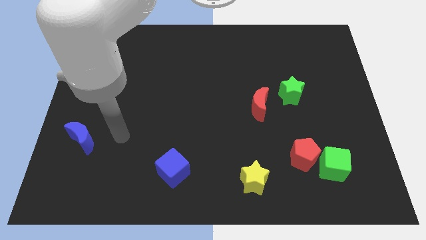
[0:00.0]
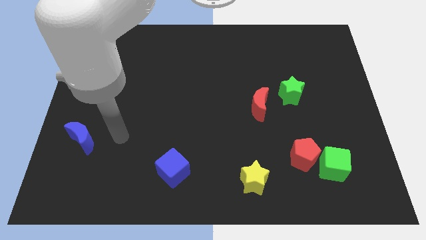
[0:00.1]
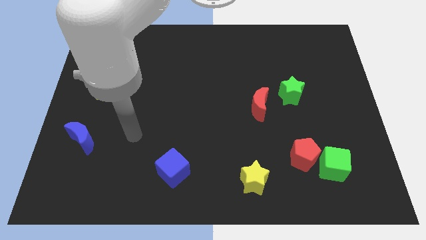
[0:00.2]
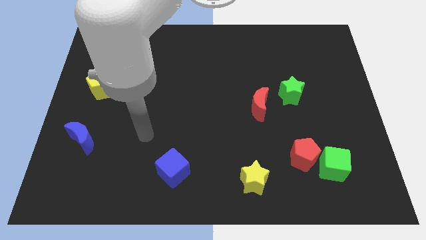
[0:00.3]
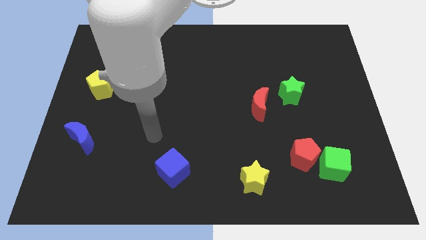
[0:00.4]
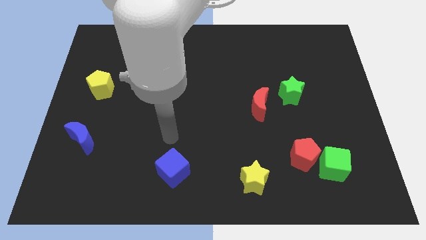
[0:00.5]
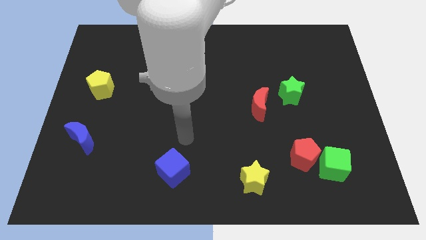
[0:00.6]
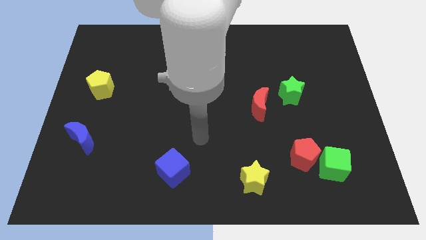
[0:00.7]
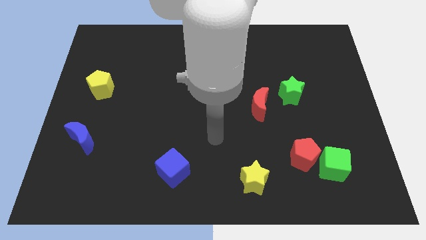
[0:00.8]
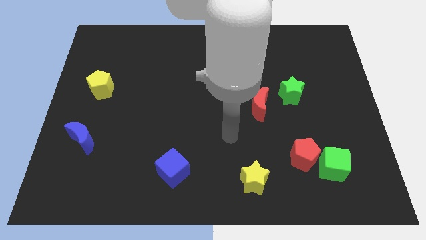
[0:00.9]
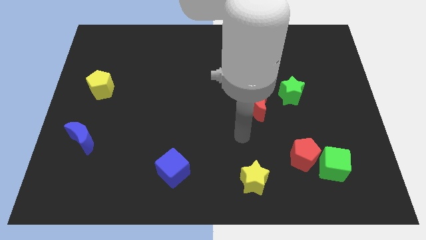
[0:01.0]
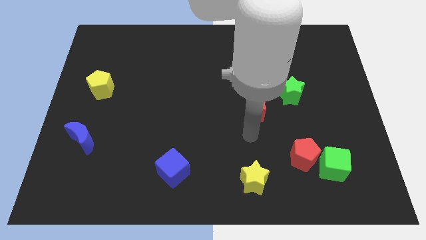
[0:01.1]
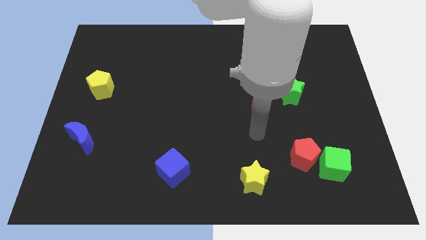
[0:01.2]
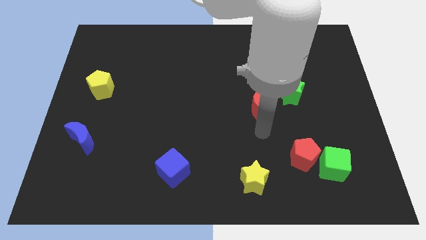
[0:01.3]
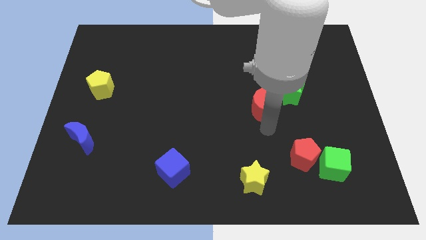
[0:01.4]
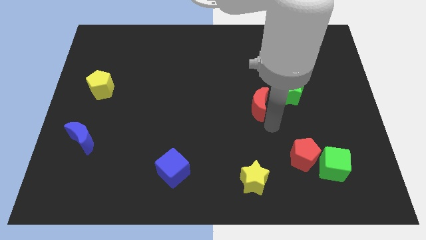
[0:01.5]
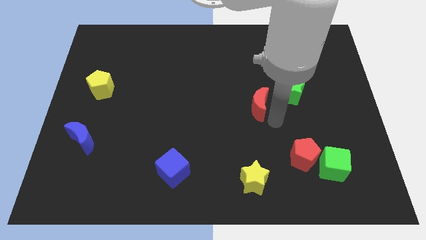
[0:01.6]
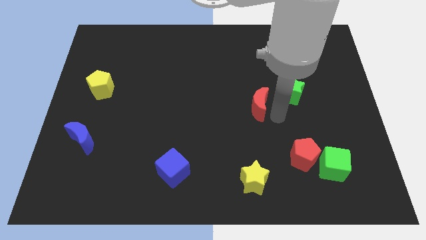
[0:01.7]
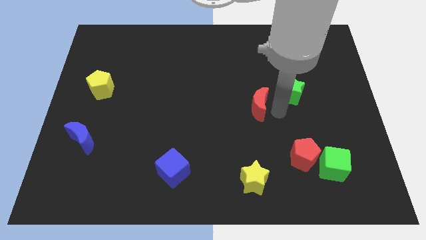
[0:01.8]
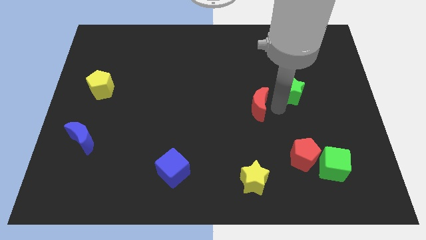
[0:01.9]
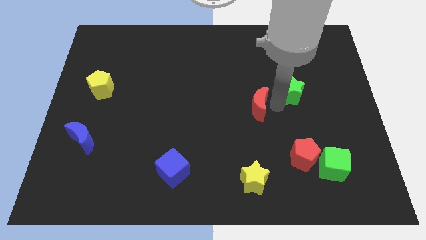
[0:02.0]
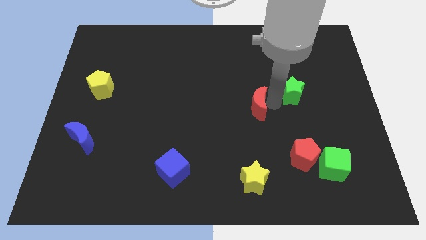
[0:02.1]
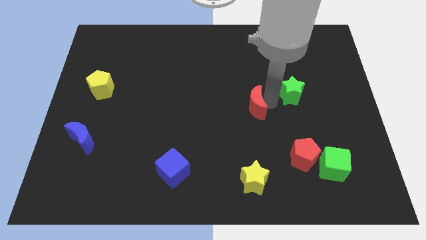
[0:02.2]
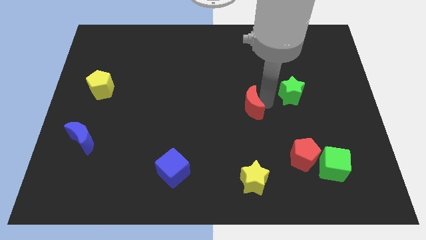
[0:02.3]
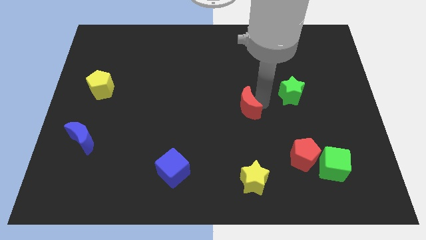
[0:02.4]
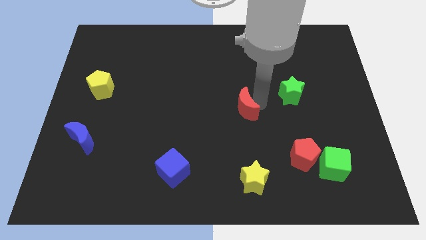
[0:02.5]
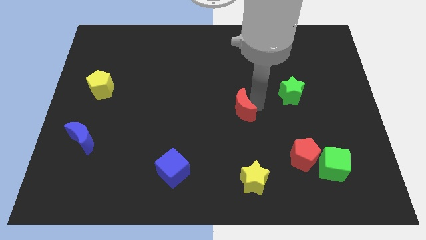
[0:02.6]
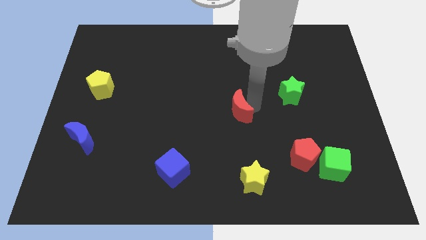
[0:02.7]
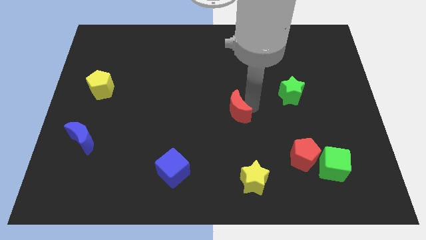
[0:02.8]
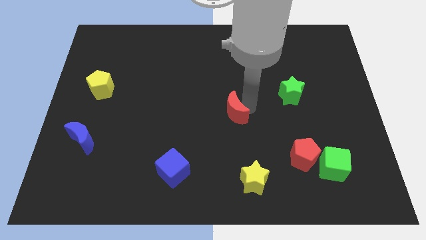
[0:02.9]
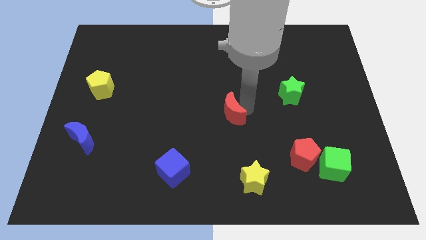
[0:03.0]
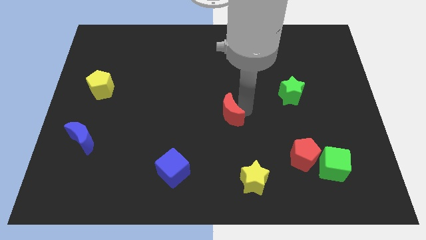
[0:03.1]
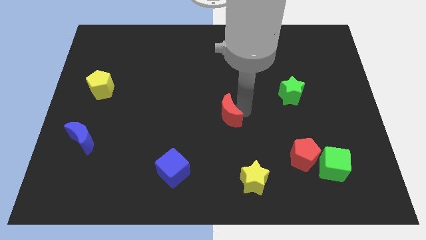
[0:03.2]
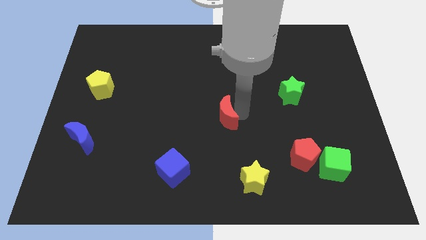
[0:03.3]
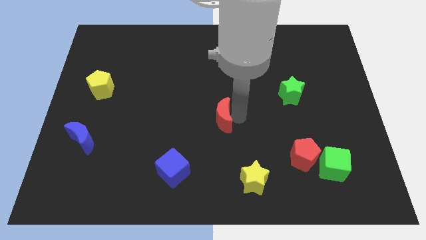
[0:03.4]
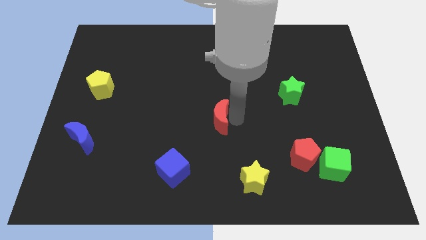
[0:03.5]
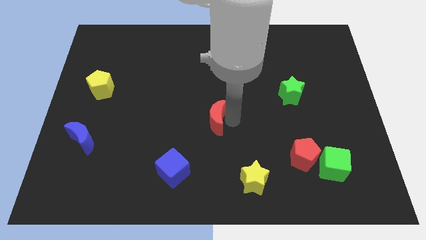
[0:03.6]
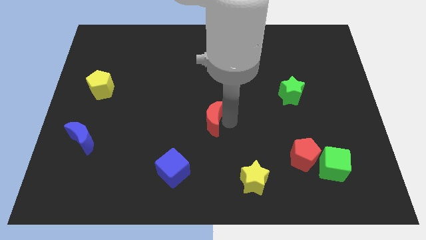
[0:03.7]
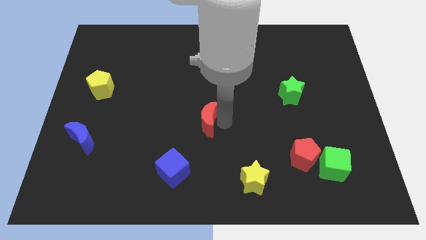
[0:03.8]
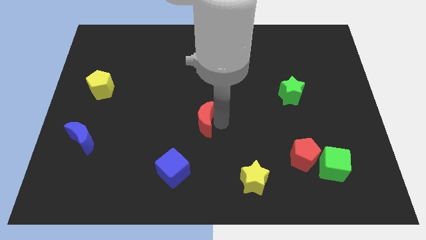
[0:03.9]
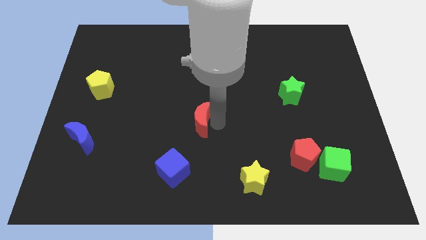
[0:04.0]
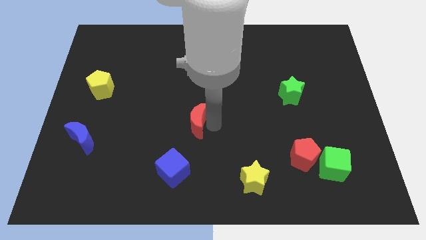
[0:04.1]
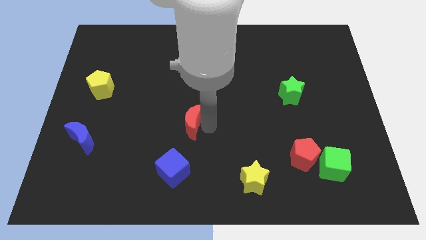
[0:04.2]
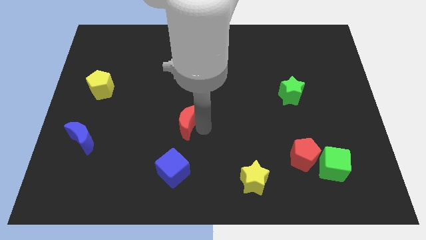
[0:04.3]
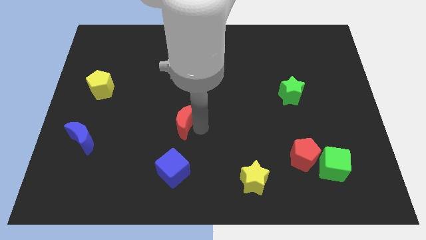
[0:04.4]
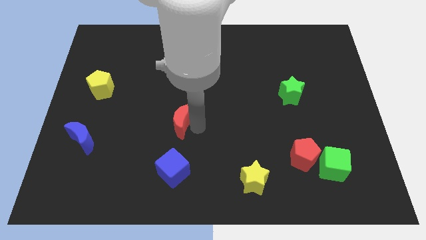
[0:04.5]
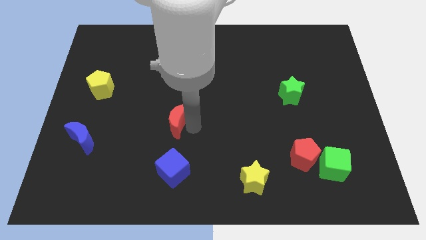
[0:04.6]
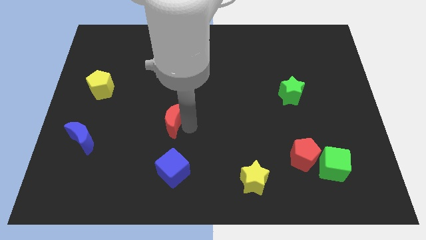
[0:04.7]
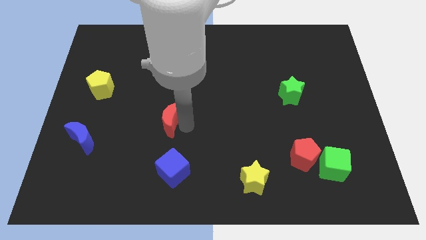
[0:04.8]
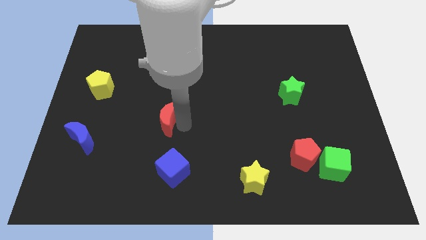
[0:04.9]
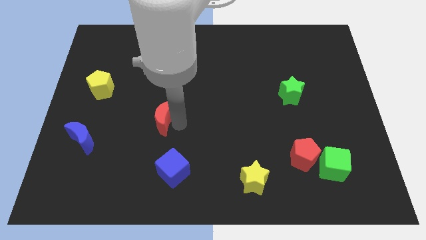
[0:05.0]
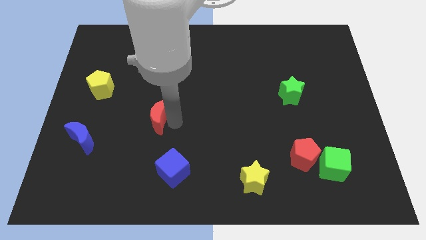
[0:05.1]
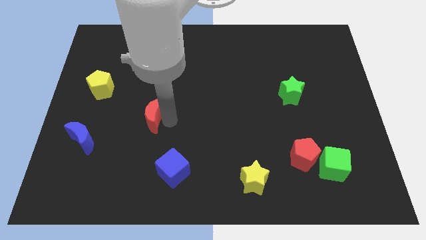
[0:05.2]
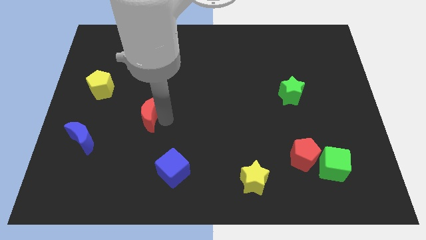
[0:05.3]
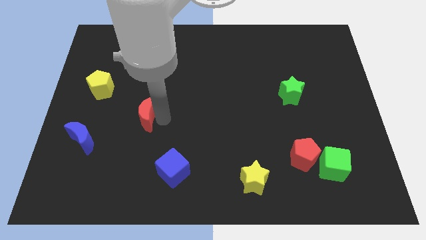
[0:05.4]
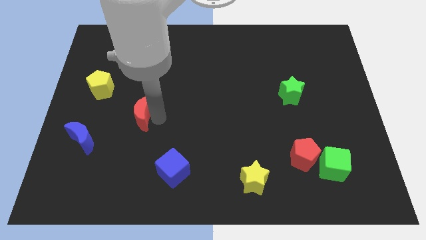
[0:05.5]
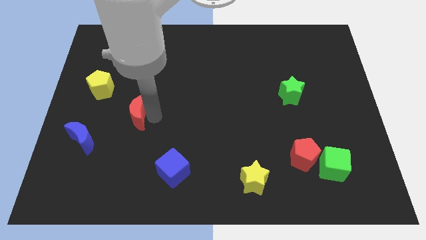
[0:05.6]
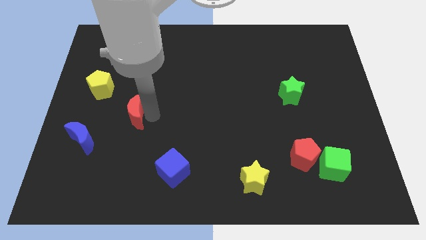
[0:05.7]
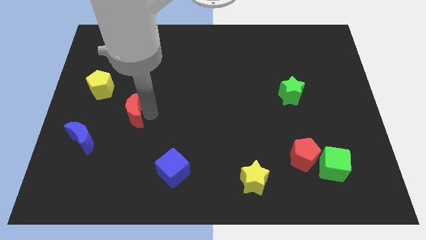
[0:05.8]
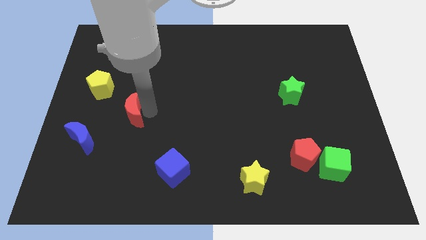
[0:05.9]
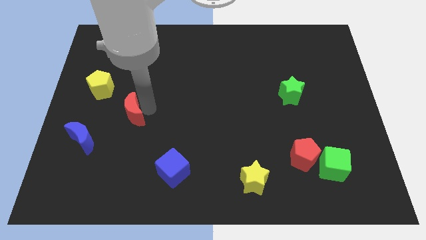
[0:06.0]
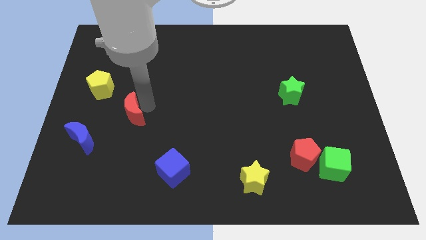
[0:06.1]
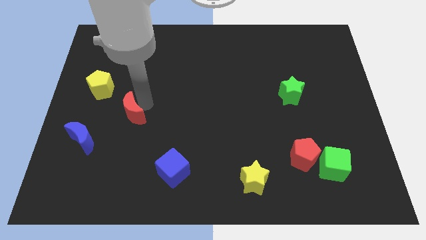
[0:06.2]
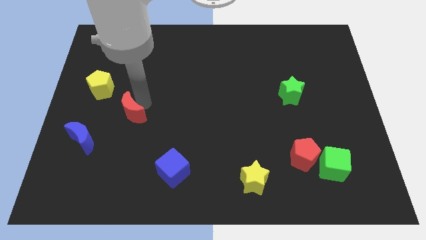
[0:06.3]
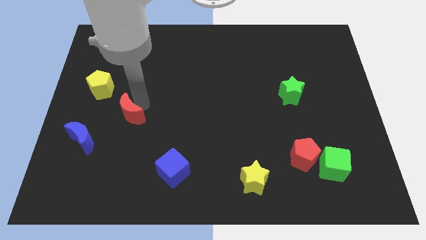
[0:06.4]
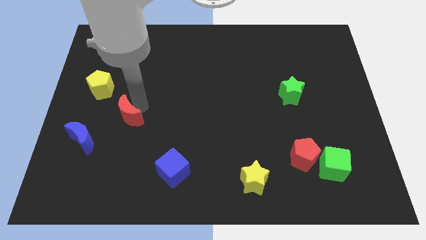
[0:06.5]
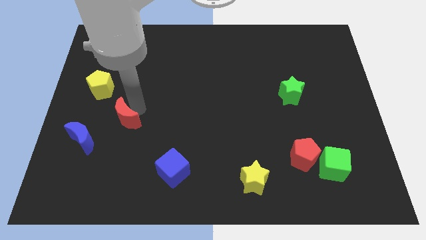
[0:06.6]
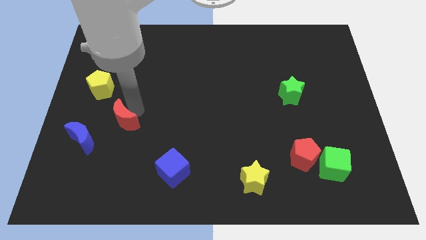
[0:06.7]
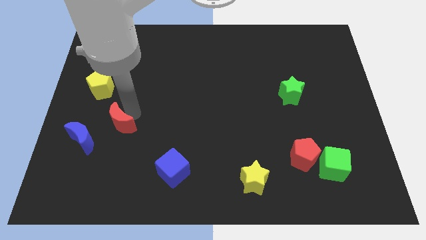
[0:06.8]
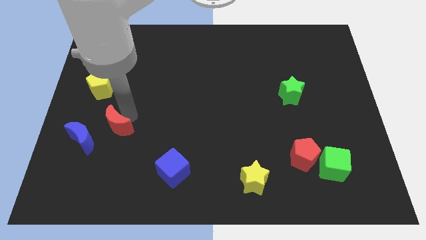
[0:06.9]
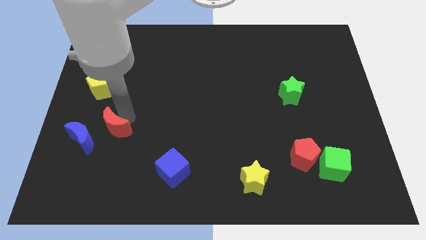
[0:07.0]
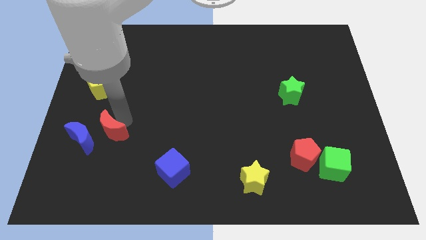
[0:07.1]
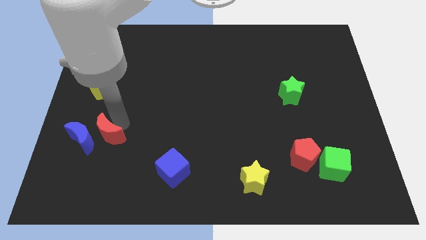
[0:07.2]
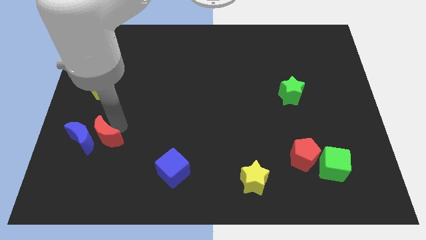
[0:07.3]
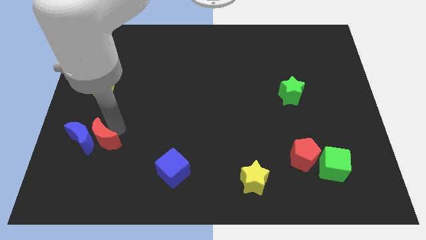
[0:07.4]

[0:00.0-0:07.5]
put the red moon towards the blue moon

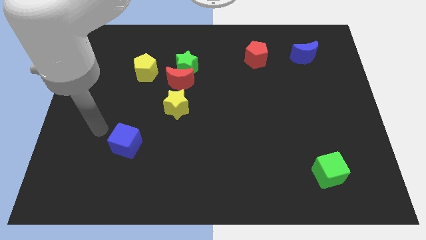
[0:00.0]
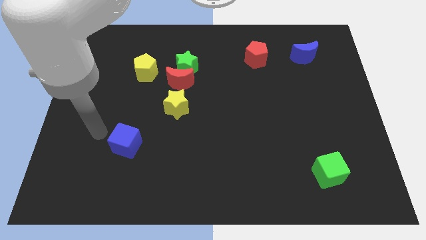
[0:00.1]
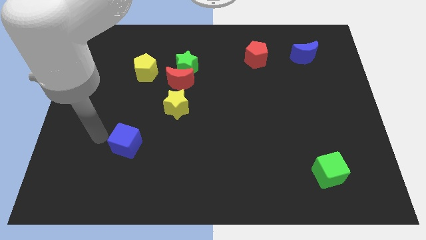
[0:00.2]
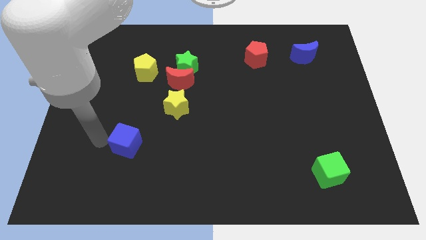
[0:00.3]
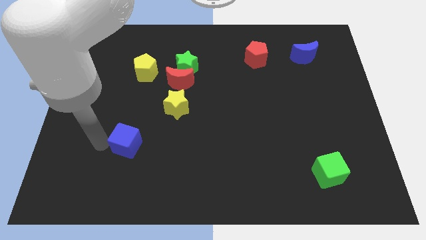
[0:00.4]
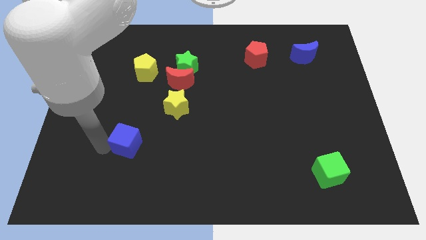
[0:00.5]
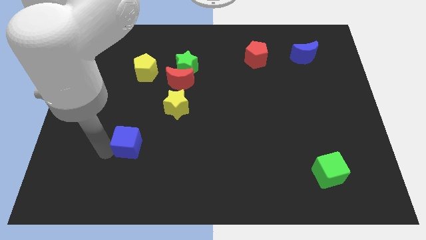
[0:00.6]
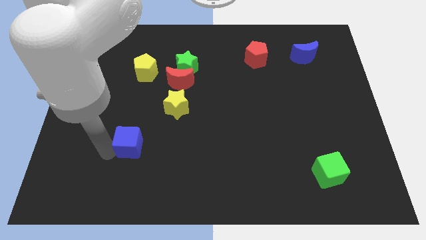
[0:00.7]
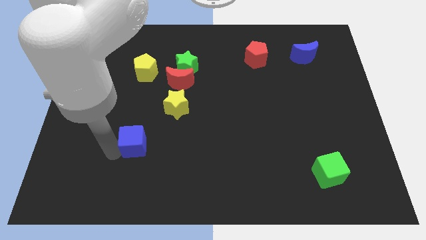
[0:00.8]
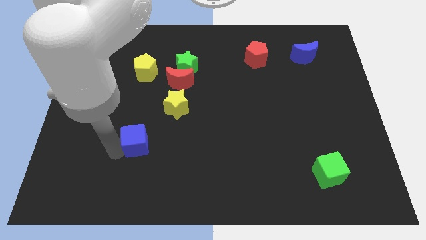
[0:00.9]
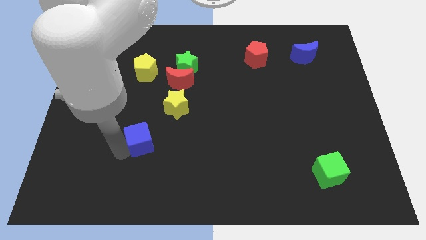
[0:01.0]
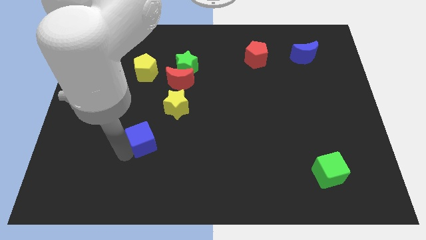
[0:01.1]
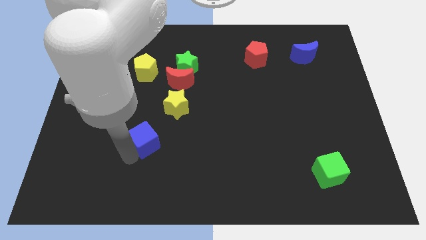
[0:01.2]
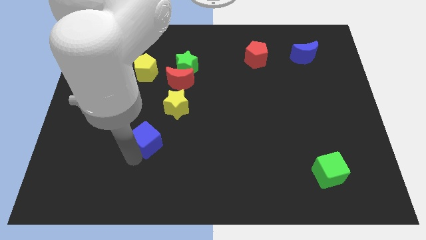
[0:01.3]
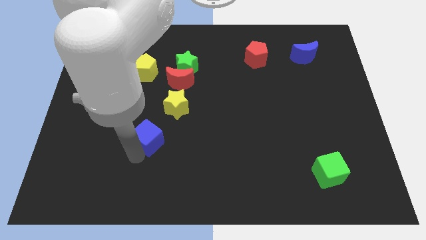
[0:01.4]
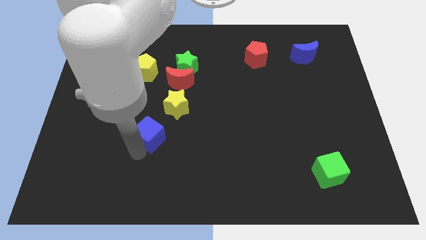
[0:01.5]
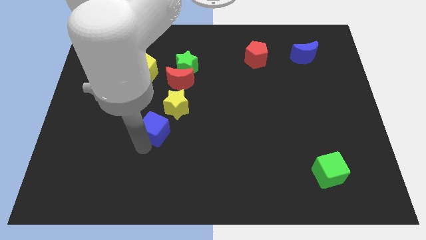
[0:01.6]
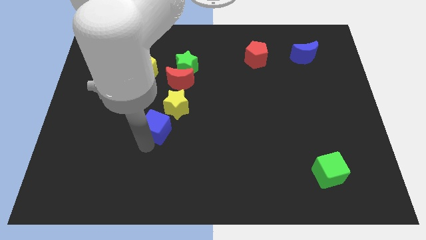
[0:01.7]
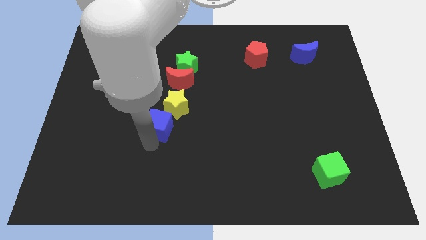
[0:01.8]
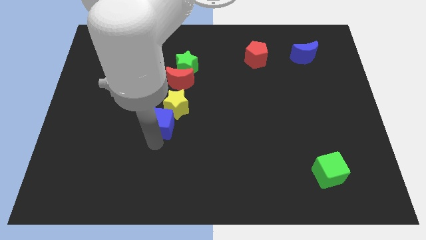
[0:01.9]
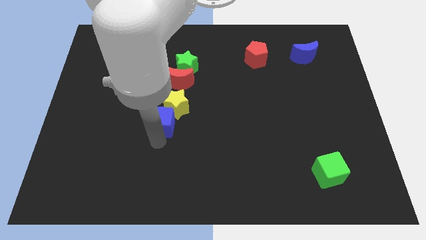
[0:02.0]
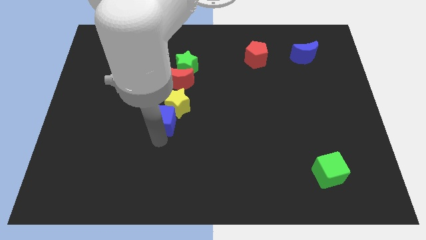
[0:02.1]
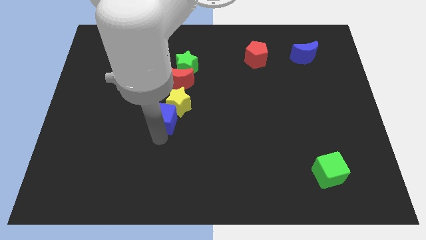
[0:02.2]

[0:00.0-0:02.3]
push the blue cube close to the yellow star
